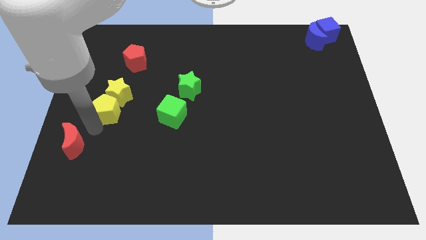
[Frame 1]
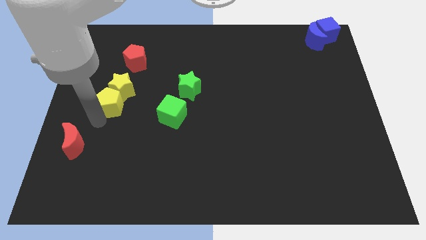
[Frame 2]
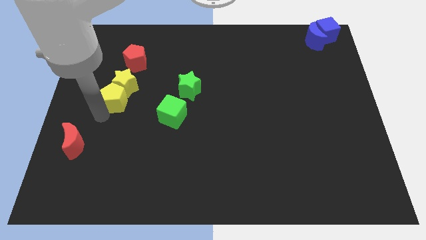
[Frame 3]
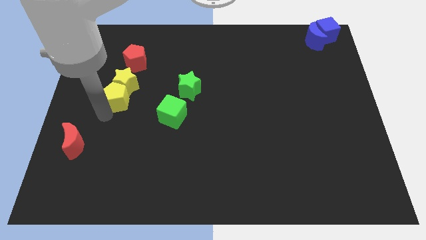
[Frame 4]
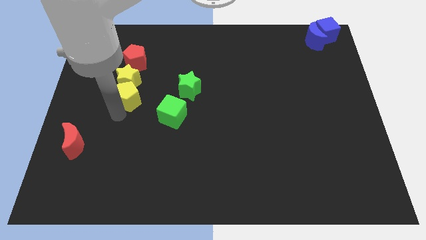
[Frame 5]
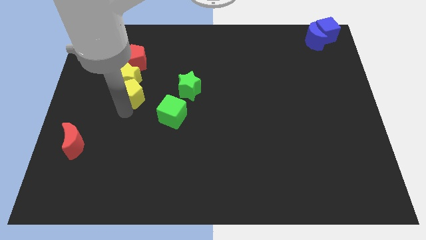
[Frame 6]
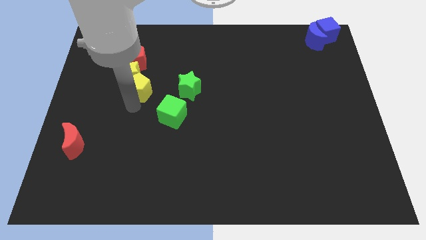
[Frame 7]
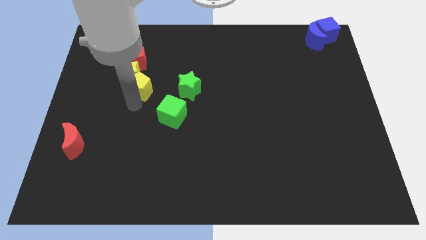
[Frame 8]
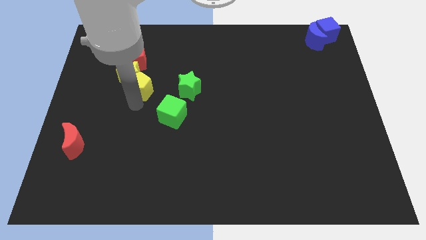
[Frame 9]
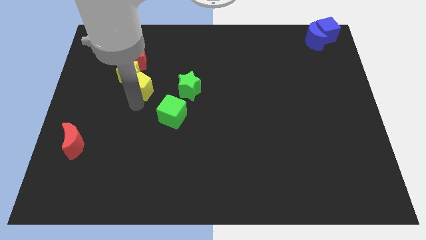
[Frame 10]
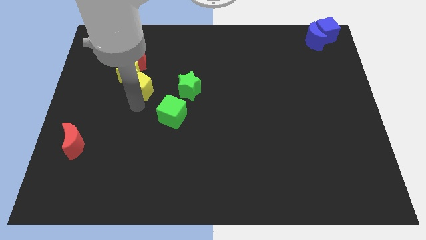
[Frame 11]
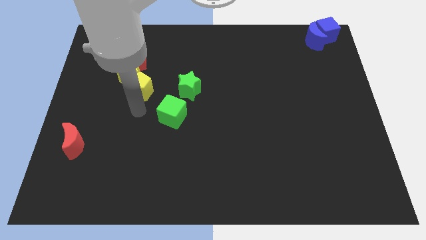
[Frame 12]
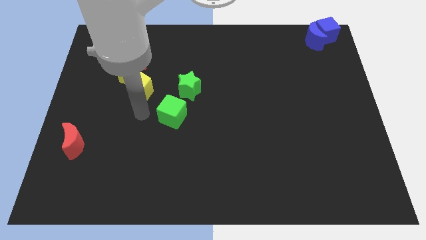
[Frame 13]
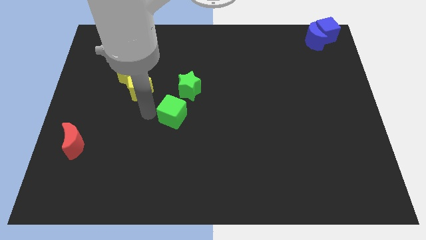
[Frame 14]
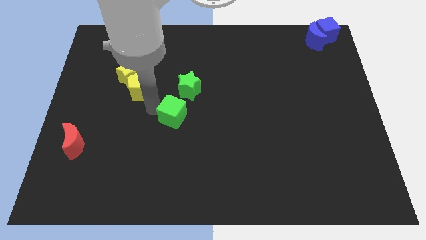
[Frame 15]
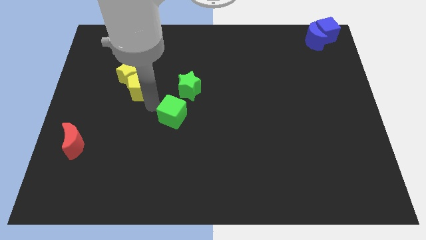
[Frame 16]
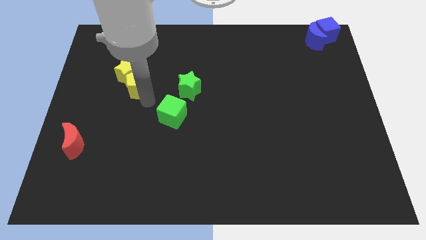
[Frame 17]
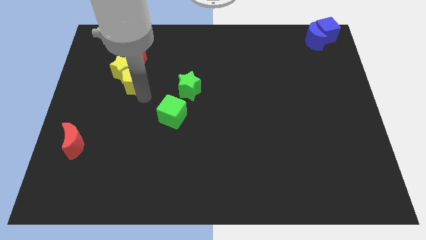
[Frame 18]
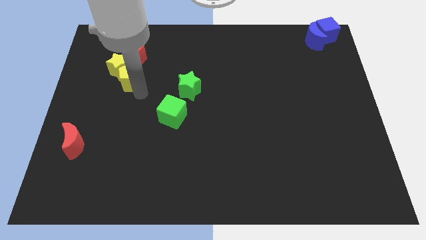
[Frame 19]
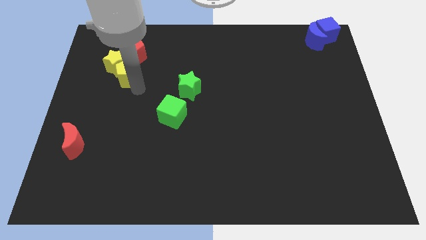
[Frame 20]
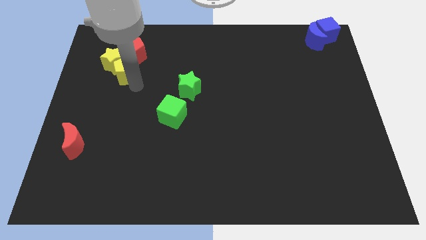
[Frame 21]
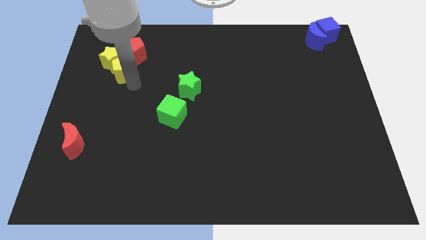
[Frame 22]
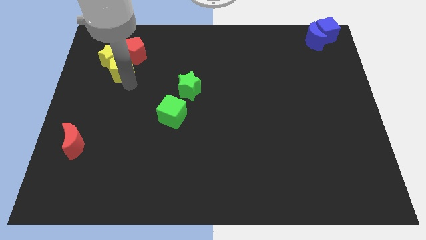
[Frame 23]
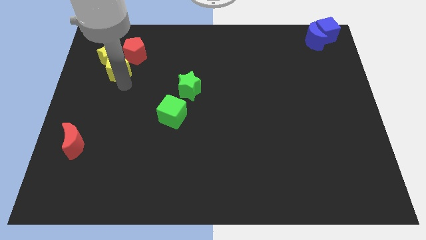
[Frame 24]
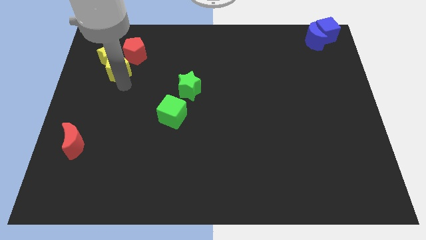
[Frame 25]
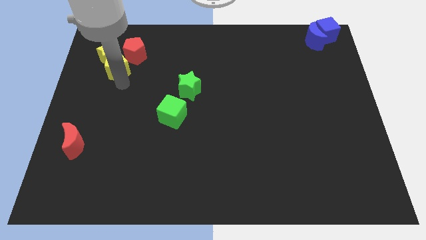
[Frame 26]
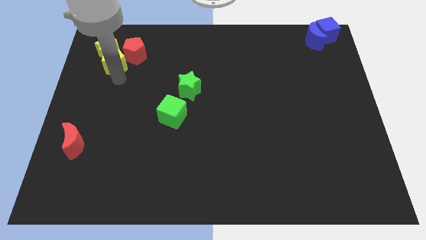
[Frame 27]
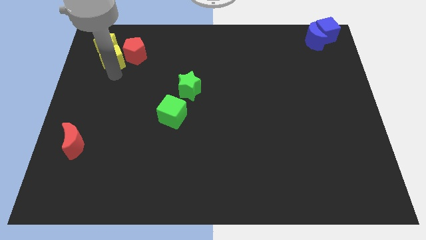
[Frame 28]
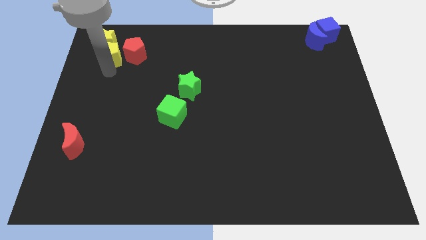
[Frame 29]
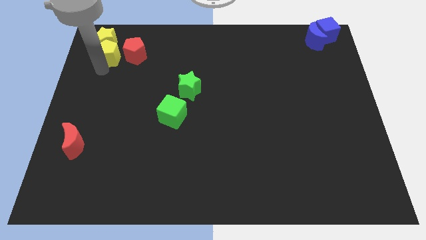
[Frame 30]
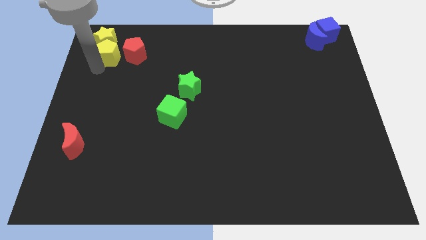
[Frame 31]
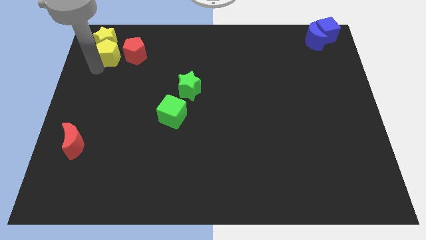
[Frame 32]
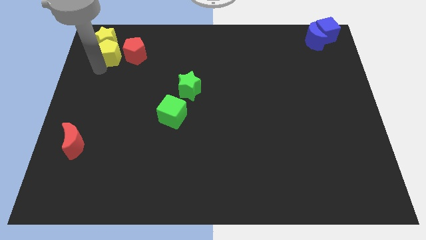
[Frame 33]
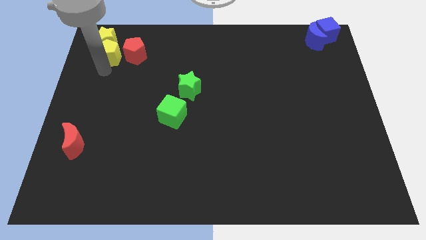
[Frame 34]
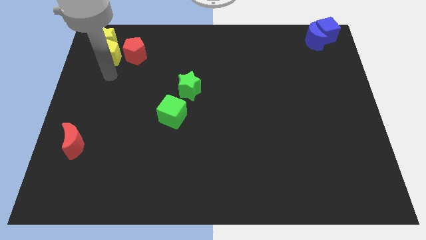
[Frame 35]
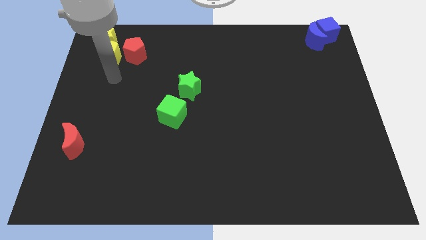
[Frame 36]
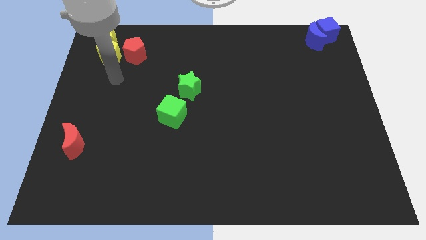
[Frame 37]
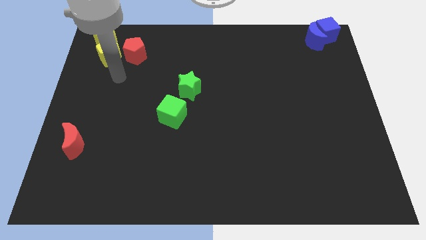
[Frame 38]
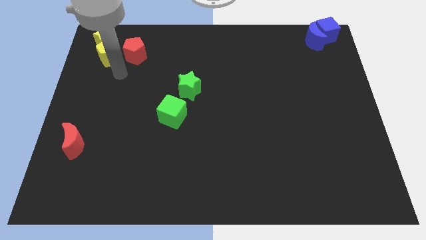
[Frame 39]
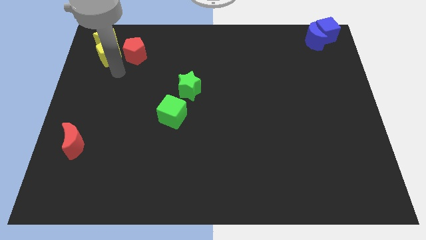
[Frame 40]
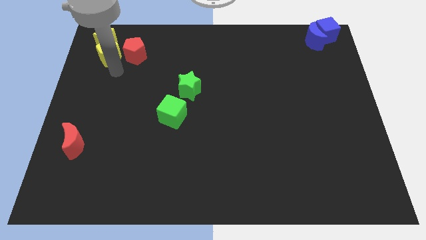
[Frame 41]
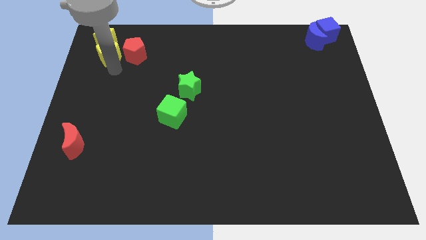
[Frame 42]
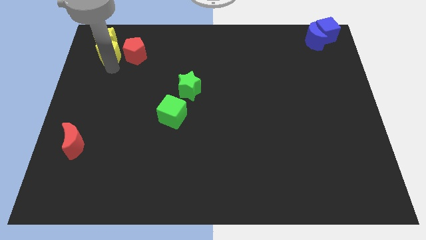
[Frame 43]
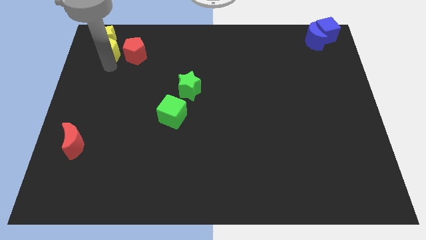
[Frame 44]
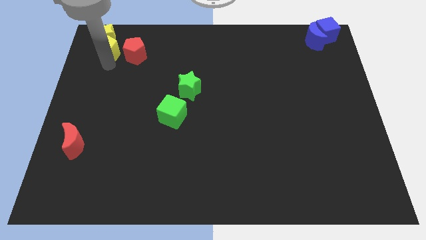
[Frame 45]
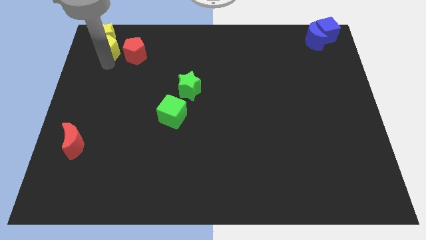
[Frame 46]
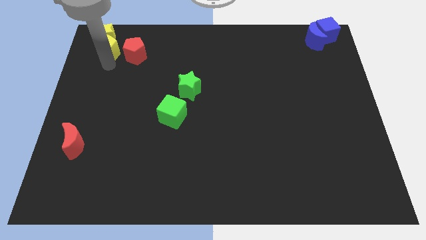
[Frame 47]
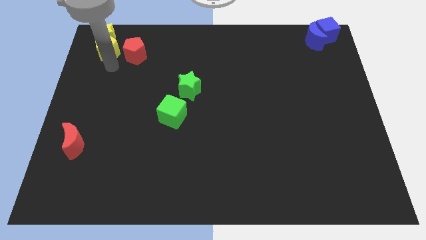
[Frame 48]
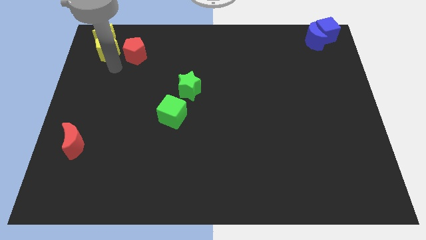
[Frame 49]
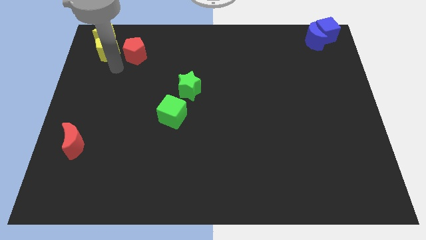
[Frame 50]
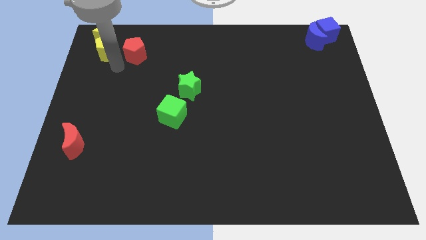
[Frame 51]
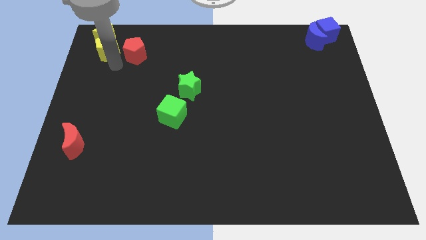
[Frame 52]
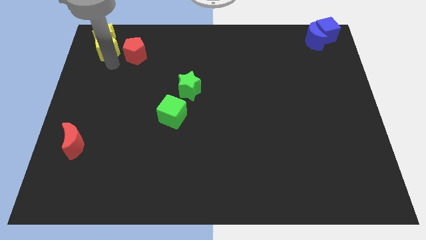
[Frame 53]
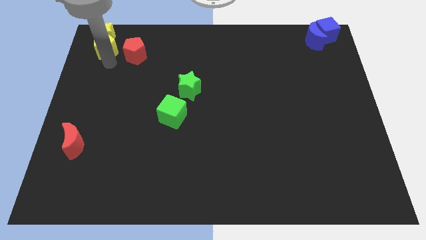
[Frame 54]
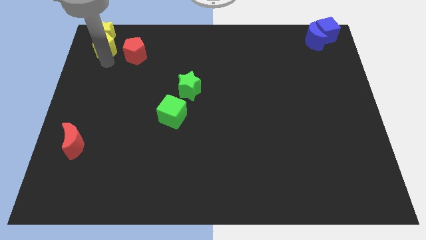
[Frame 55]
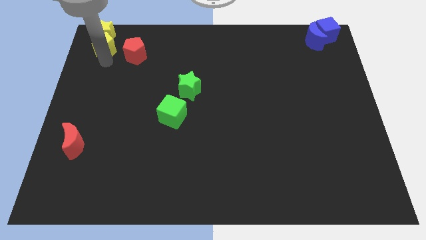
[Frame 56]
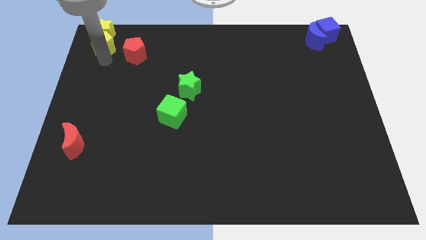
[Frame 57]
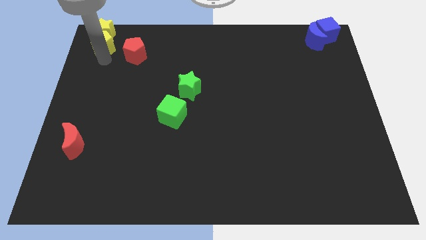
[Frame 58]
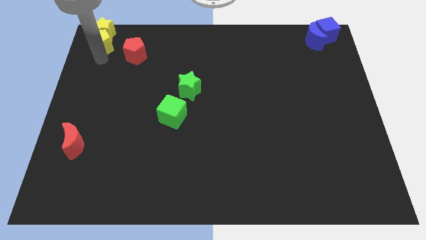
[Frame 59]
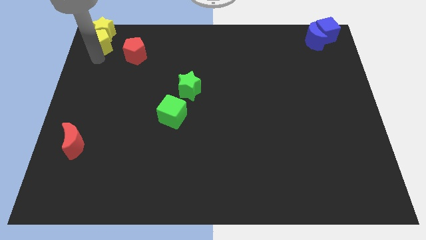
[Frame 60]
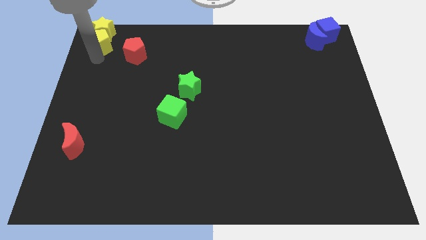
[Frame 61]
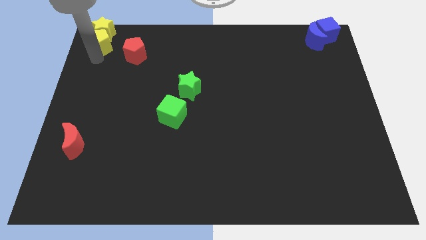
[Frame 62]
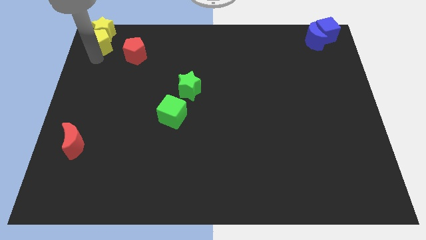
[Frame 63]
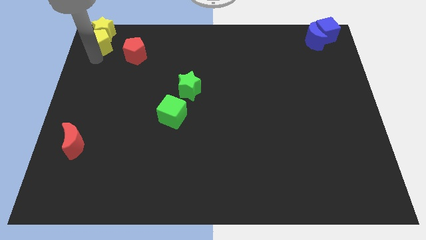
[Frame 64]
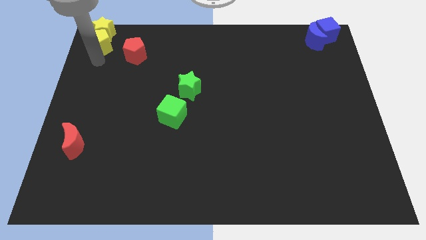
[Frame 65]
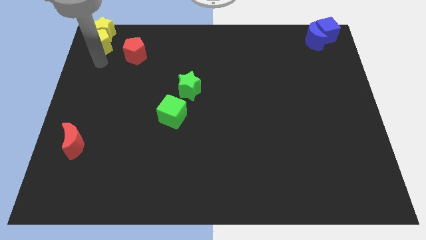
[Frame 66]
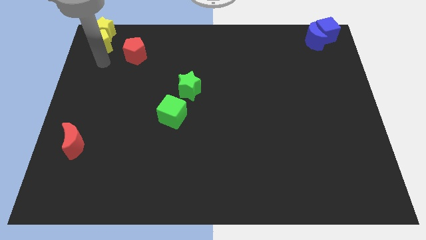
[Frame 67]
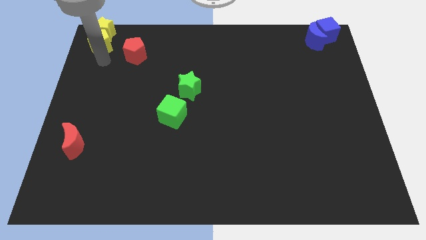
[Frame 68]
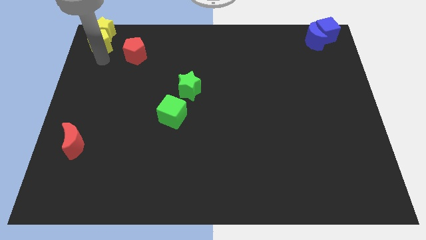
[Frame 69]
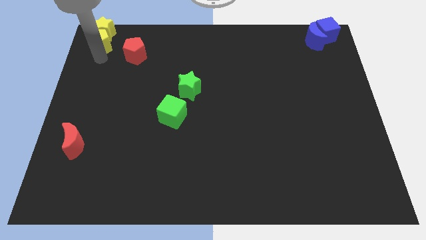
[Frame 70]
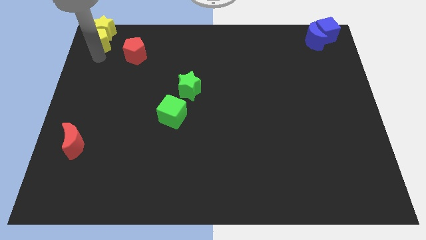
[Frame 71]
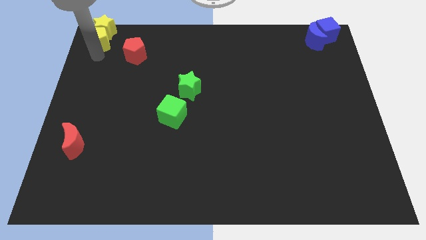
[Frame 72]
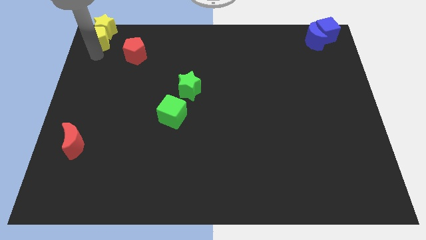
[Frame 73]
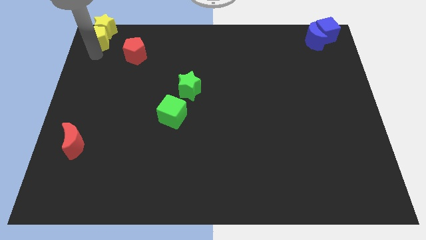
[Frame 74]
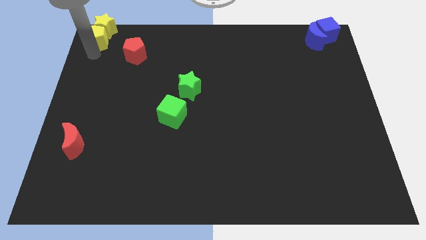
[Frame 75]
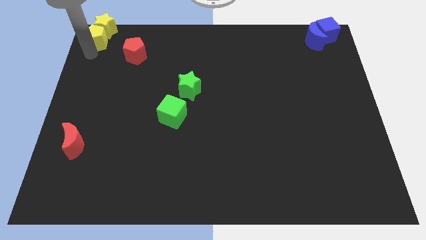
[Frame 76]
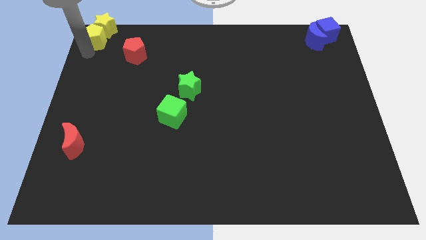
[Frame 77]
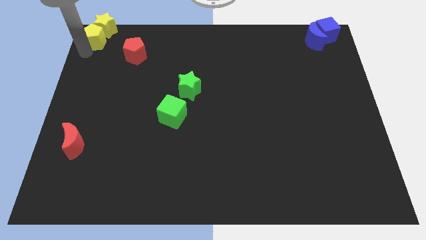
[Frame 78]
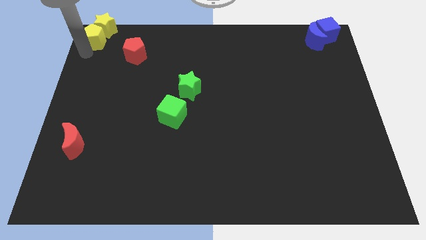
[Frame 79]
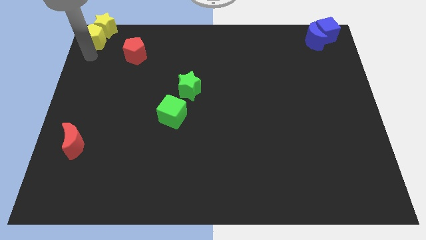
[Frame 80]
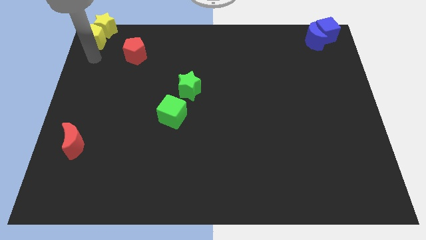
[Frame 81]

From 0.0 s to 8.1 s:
push the yellow pentagon and yellow star to the left top corner

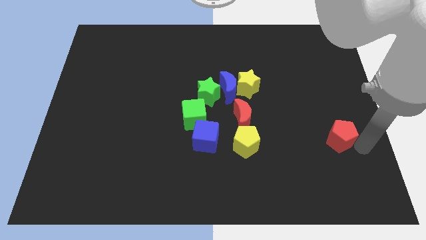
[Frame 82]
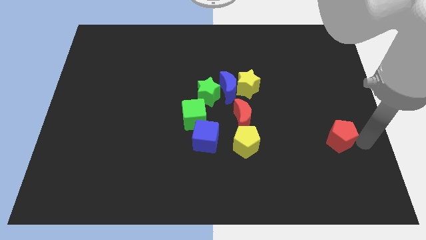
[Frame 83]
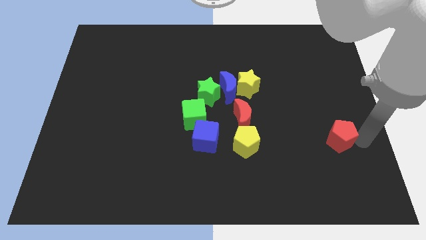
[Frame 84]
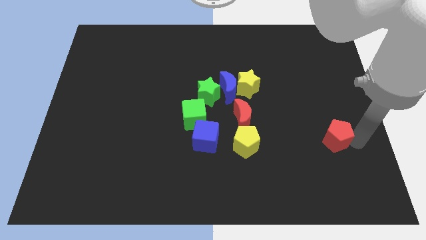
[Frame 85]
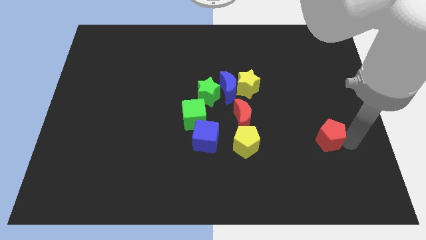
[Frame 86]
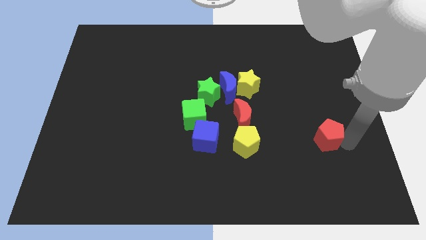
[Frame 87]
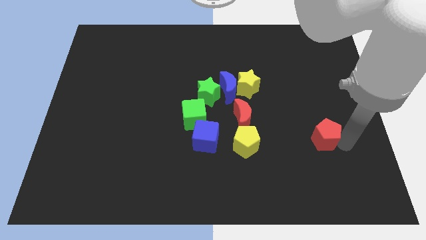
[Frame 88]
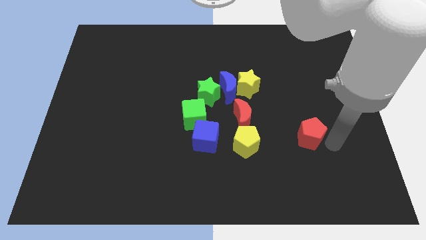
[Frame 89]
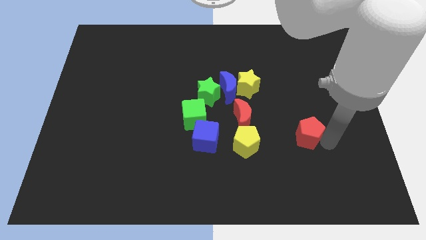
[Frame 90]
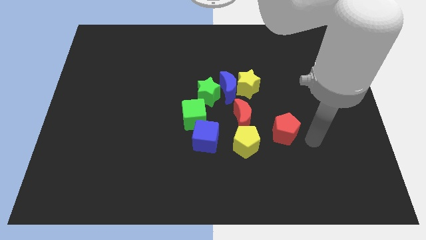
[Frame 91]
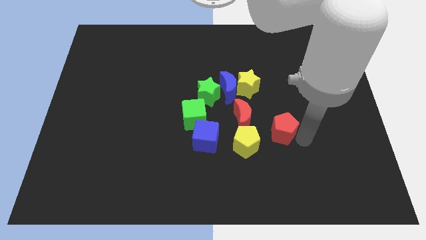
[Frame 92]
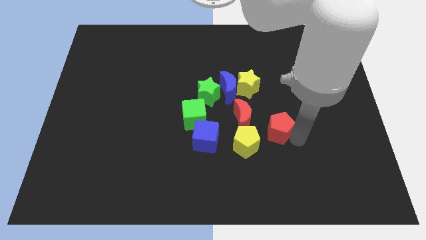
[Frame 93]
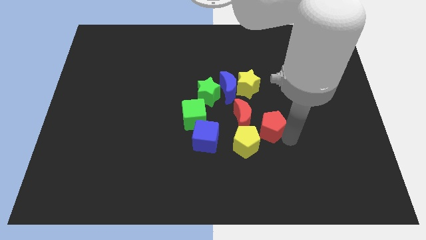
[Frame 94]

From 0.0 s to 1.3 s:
push the red pentagon towards the center
